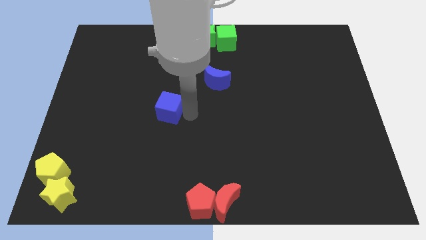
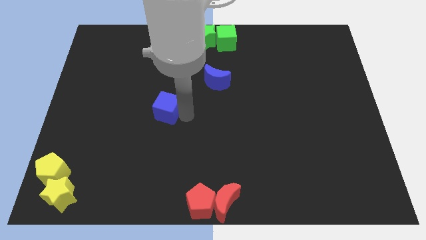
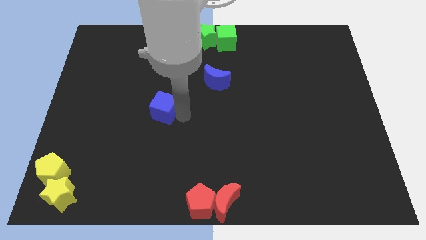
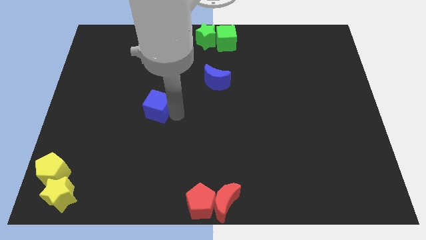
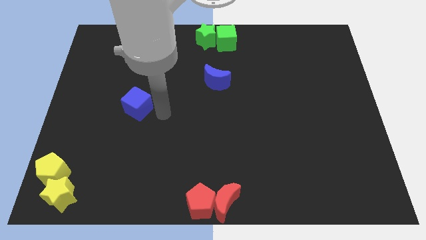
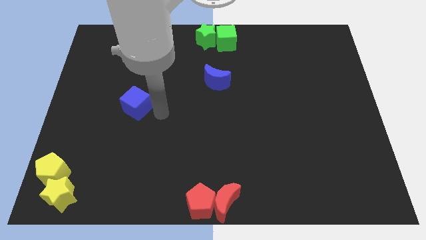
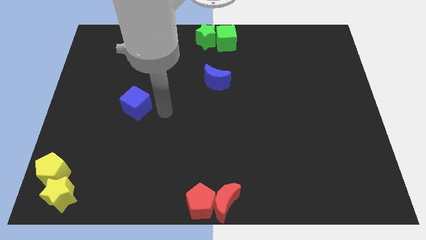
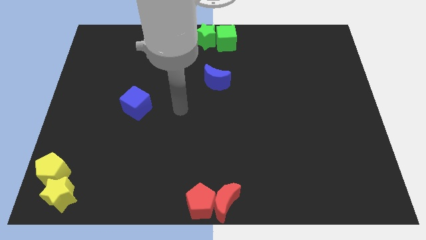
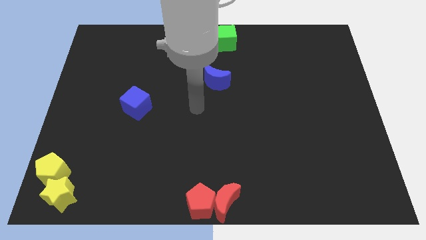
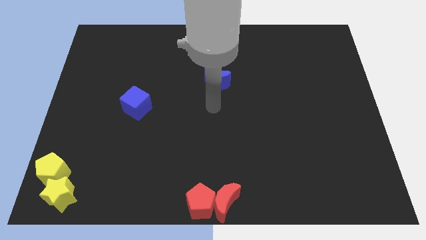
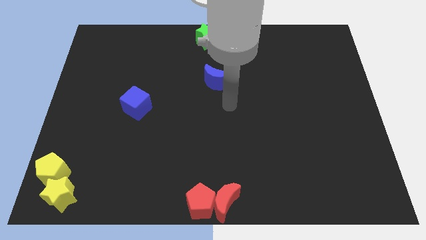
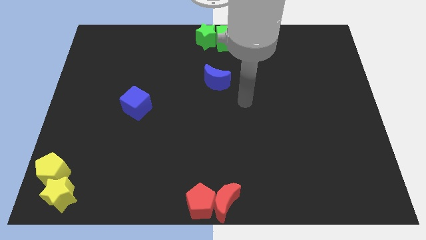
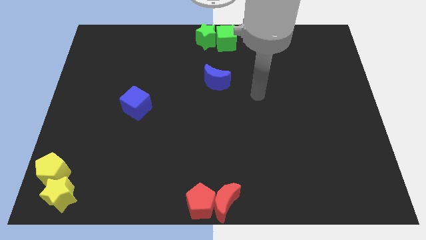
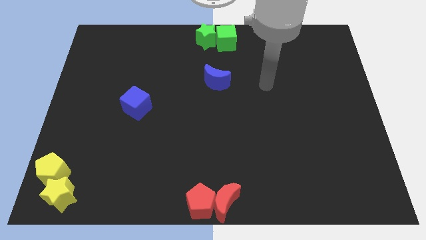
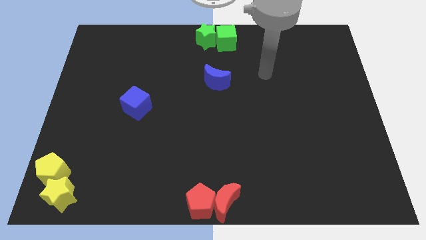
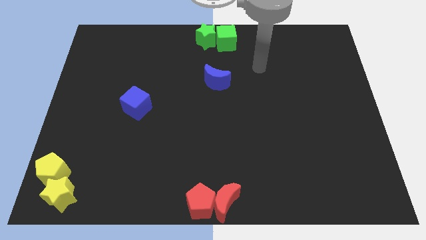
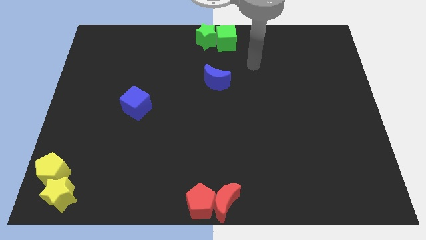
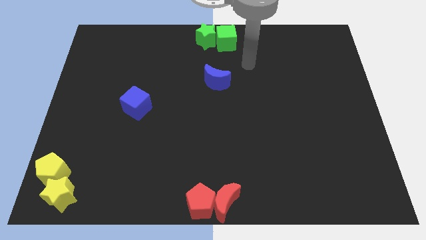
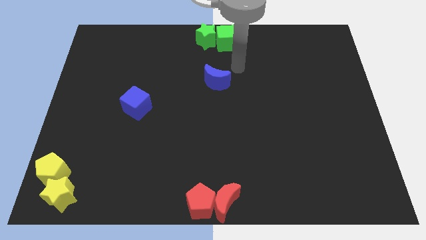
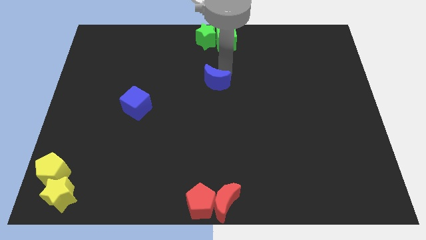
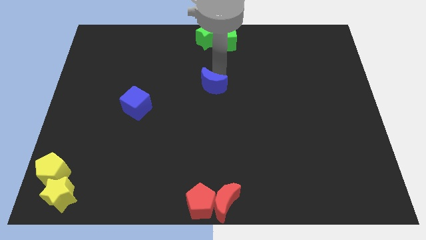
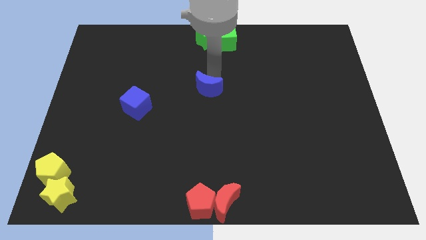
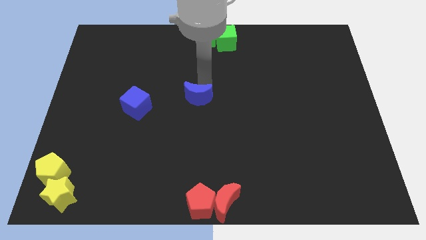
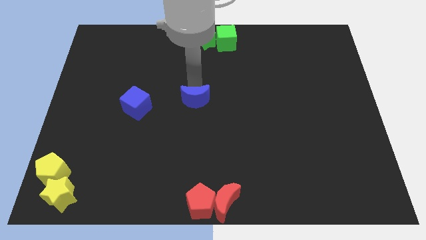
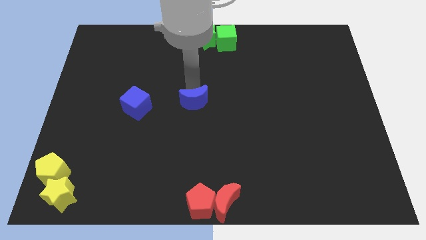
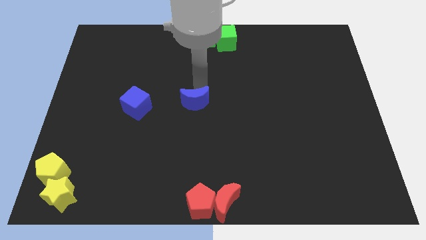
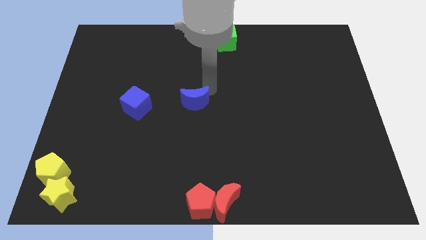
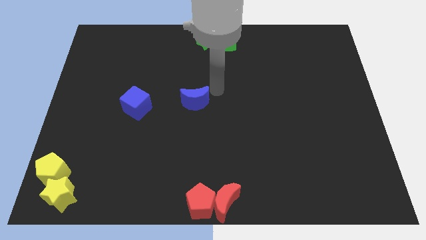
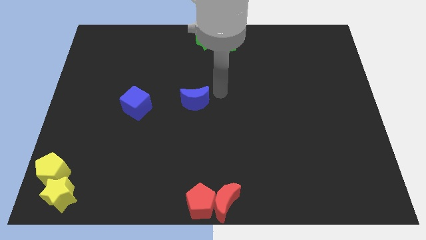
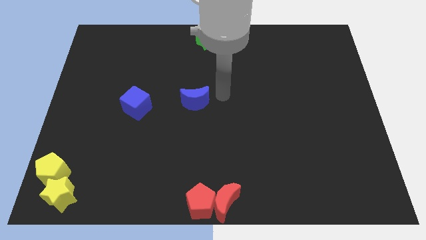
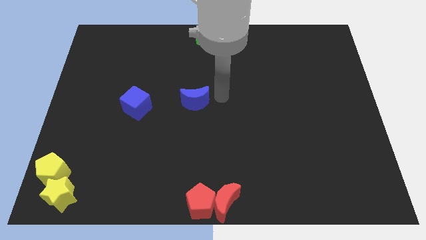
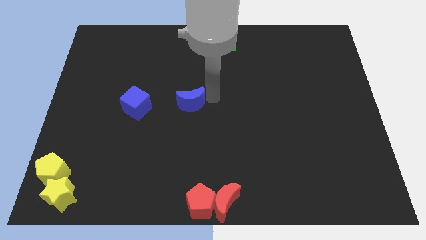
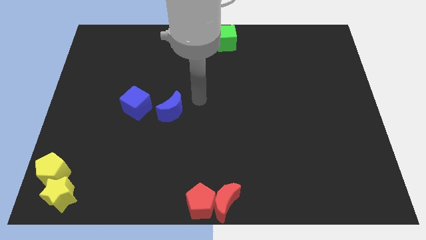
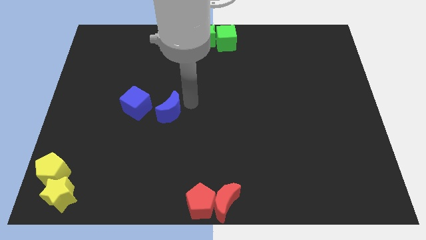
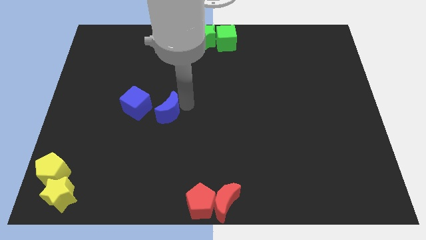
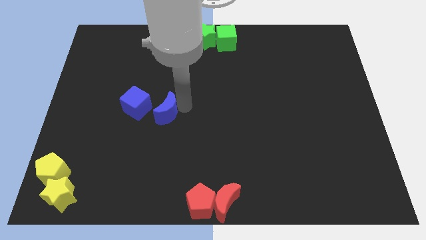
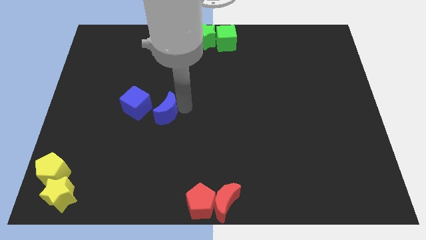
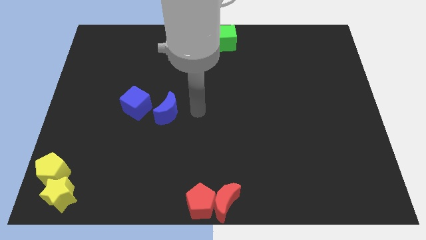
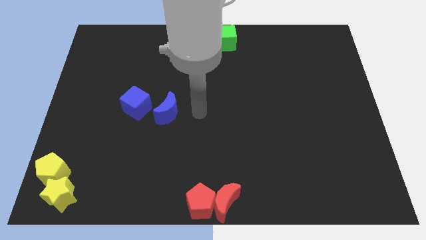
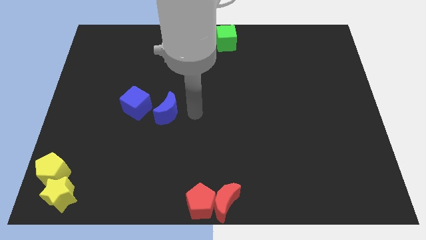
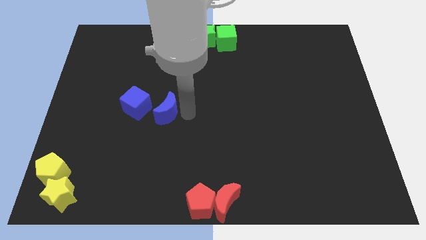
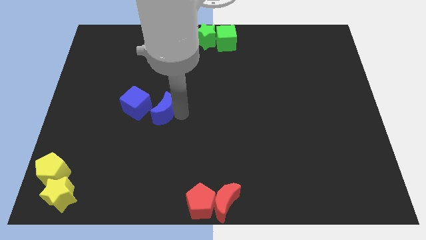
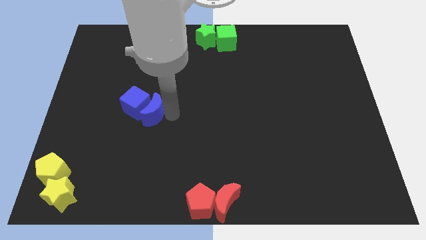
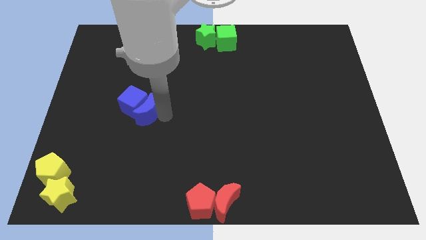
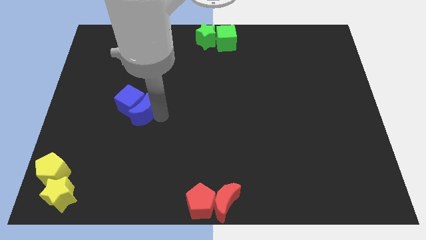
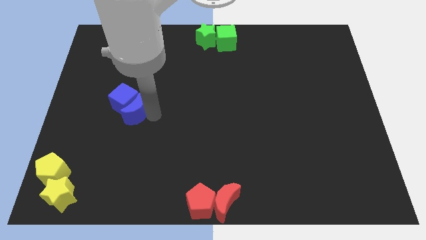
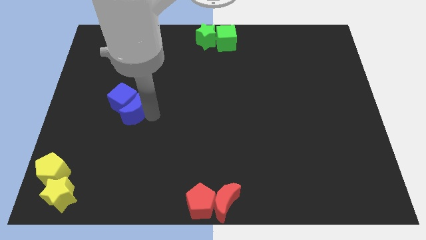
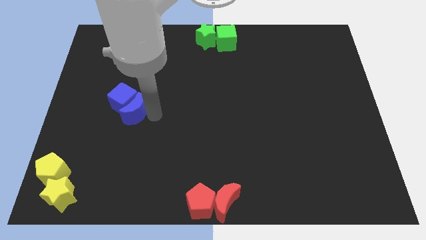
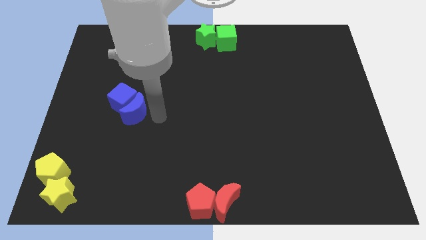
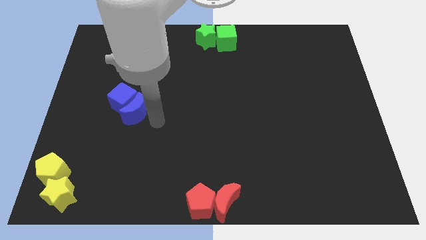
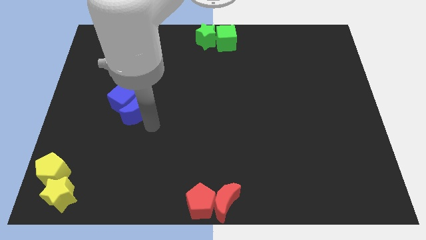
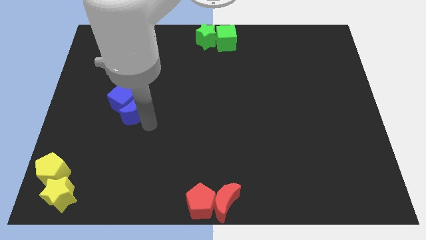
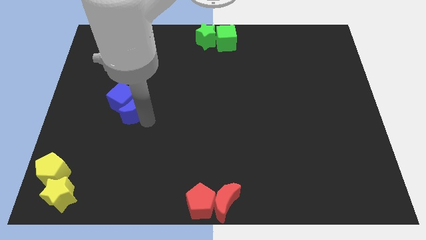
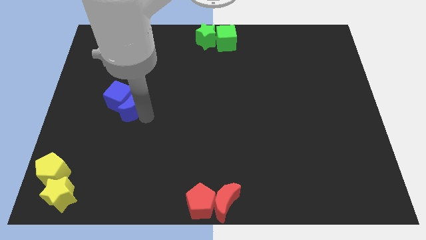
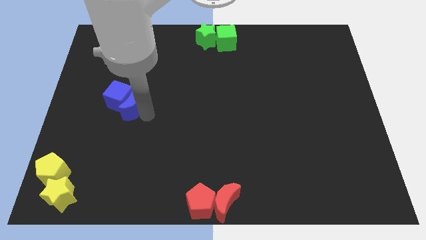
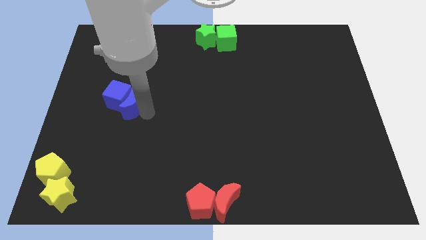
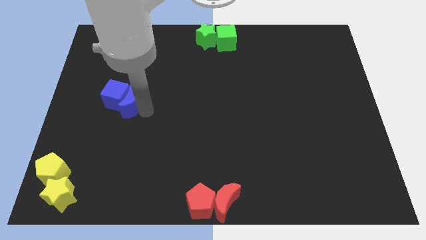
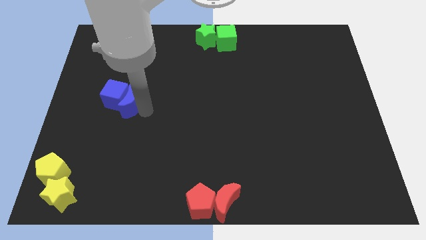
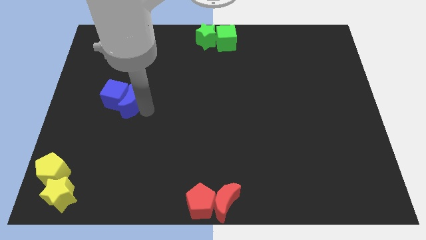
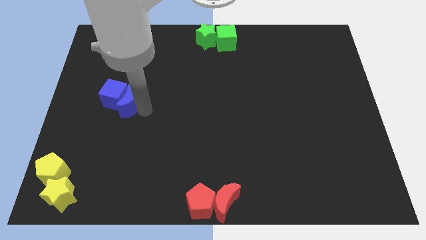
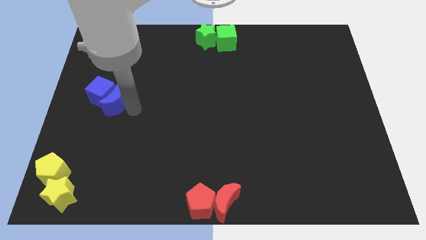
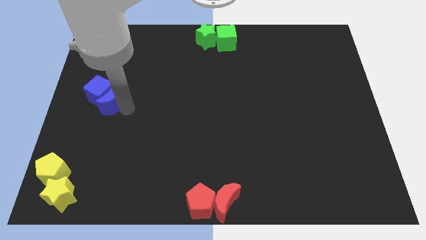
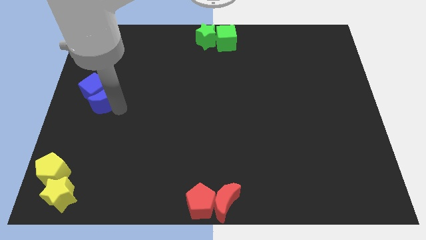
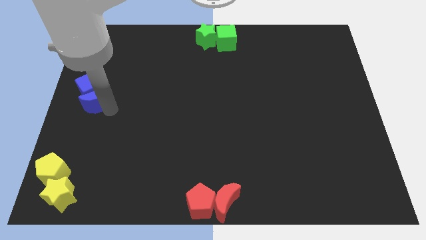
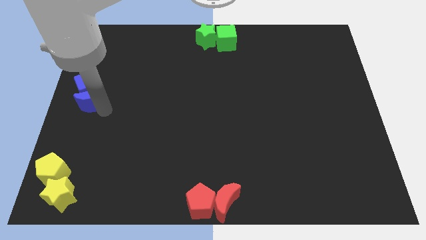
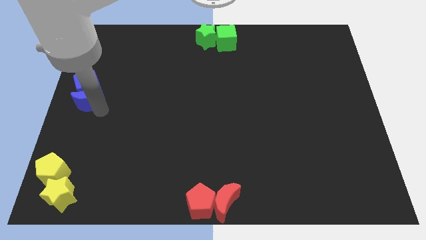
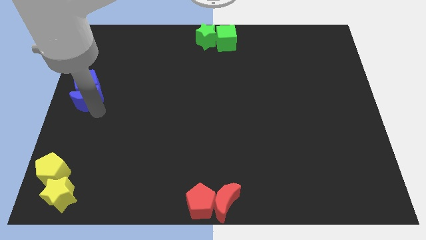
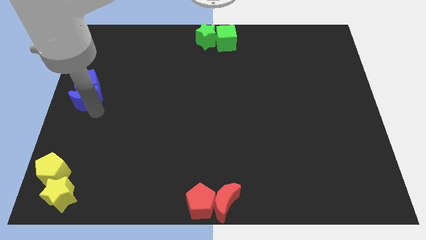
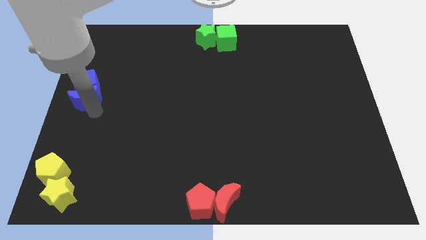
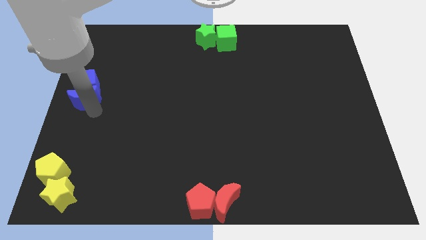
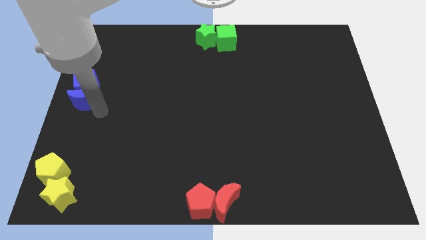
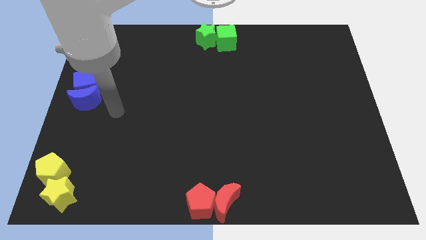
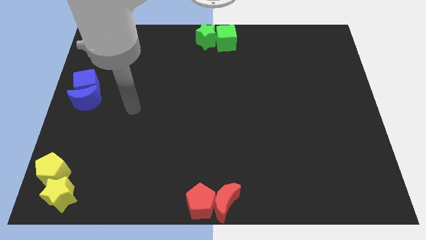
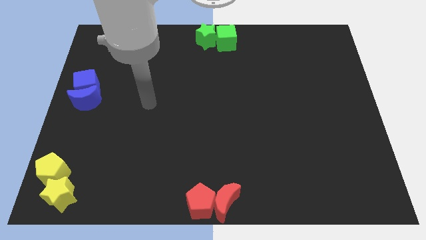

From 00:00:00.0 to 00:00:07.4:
slide the blue blocks to the center left

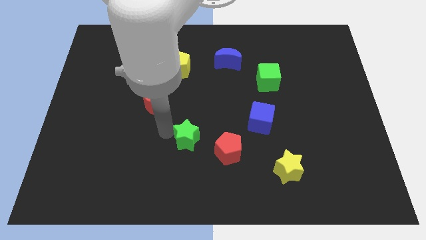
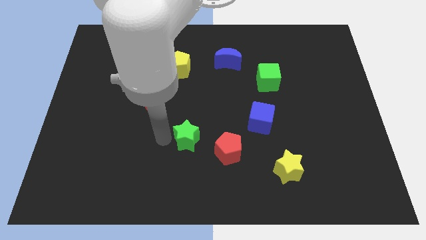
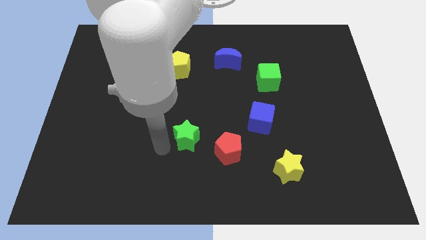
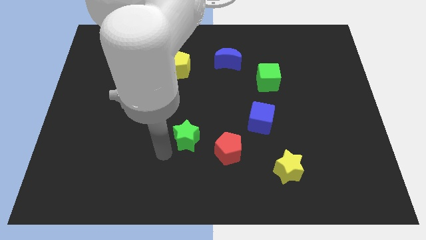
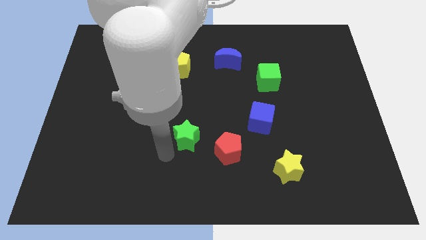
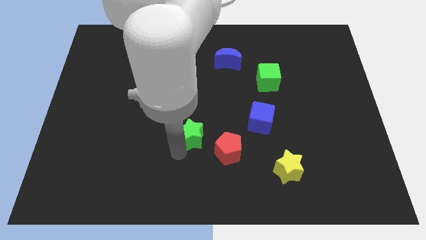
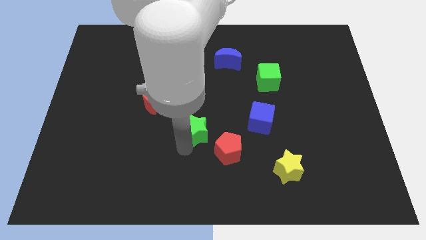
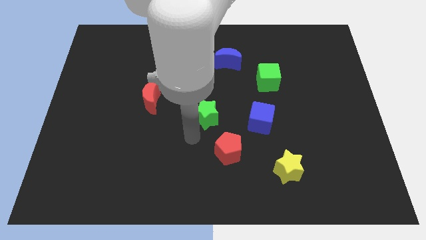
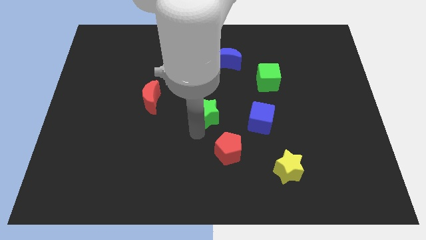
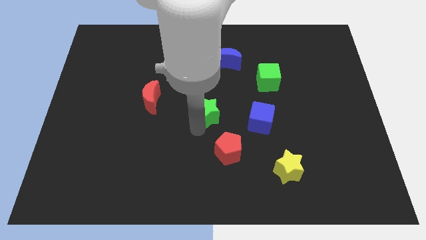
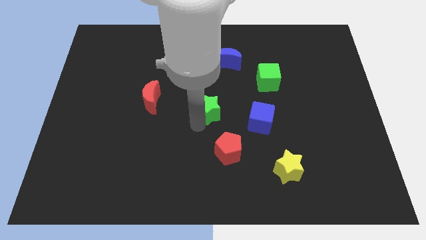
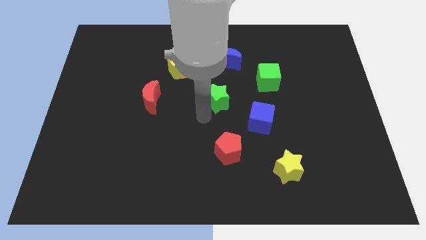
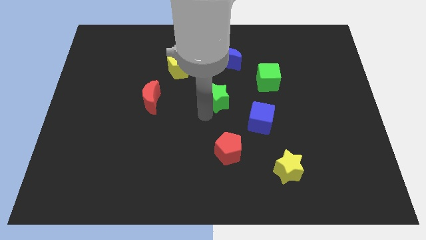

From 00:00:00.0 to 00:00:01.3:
push the green star in between the all blocks
